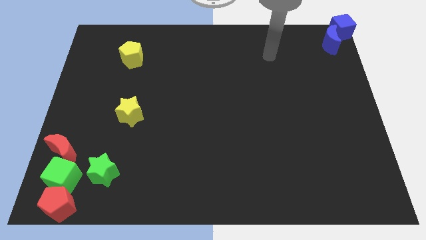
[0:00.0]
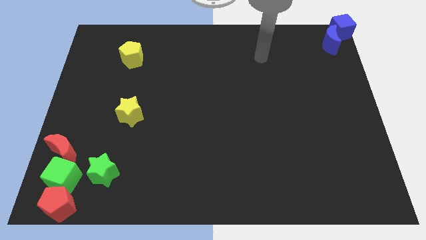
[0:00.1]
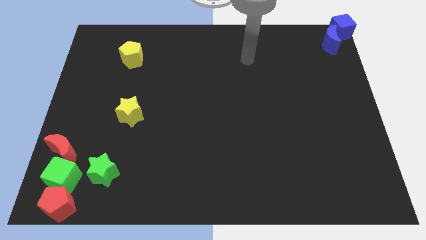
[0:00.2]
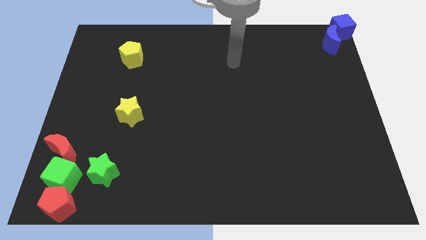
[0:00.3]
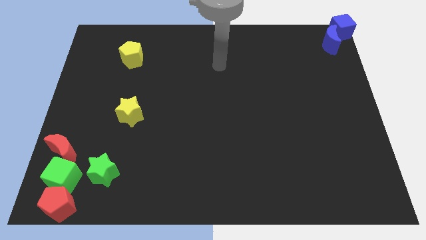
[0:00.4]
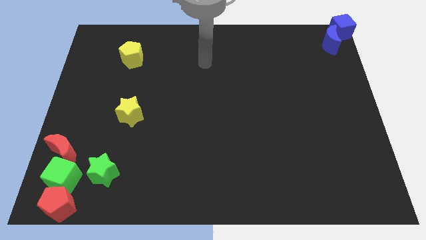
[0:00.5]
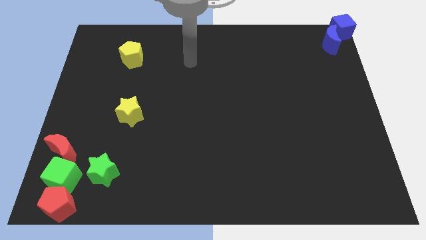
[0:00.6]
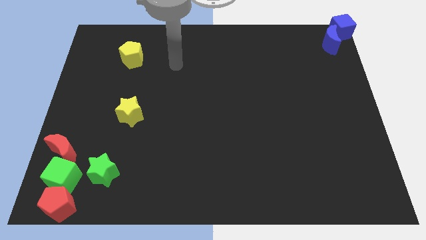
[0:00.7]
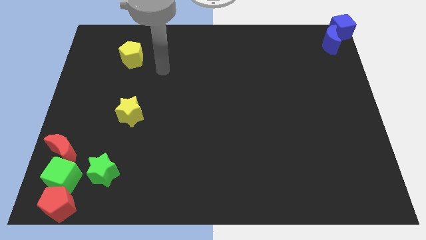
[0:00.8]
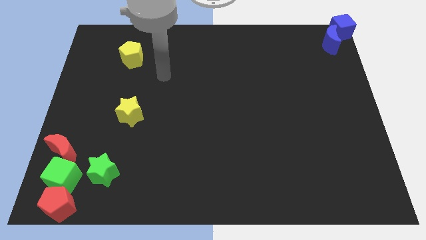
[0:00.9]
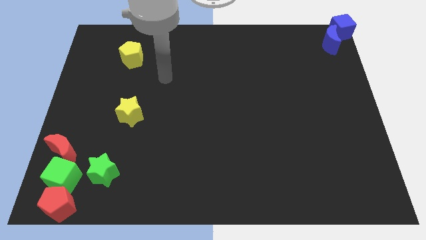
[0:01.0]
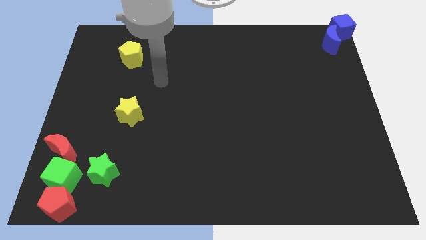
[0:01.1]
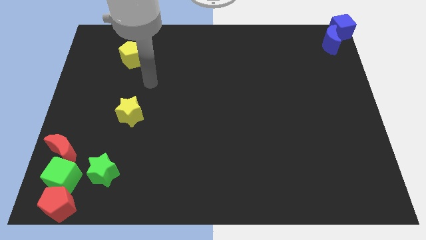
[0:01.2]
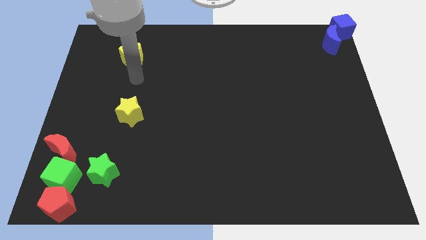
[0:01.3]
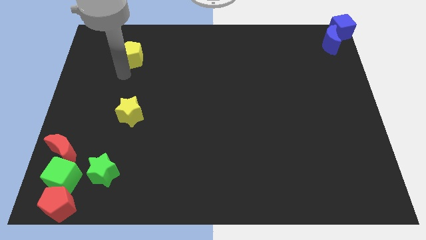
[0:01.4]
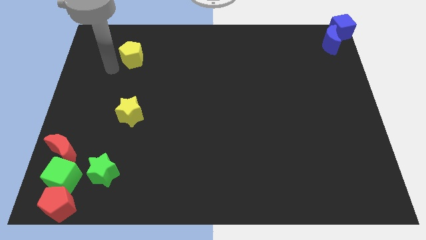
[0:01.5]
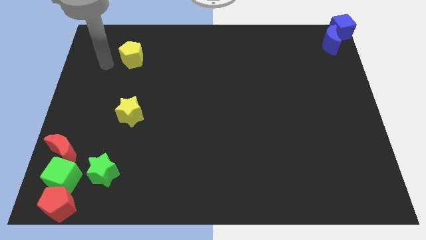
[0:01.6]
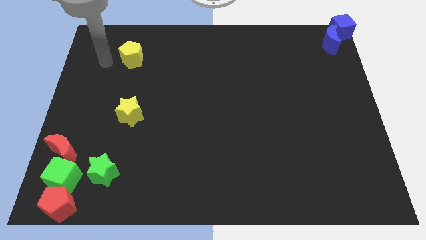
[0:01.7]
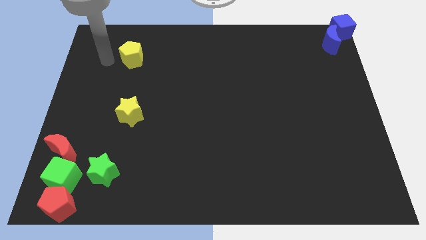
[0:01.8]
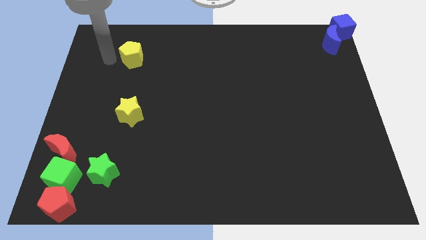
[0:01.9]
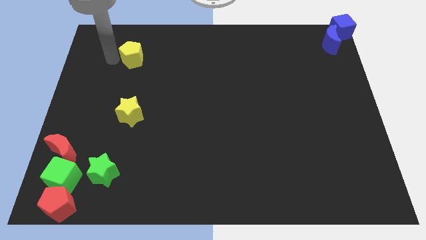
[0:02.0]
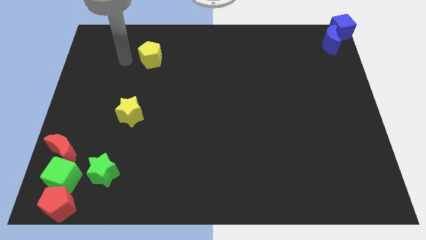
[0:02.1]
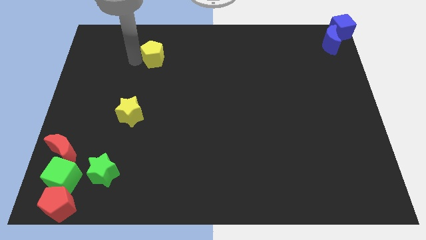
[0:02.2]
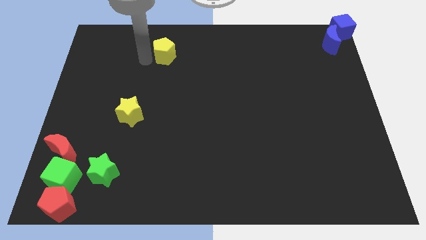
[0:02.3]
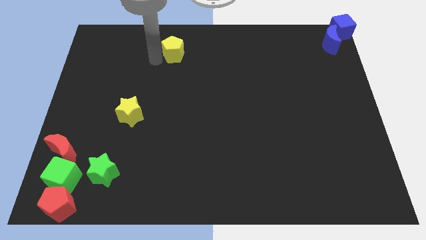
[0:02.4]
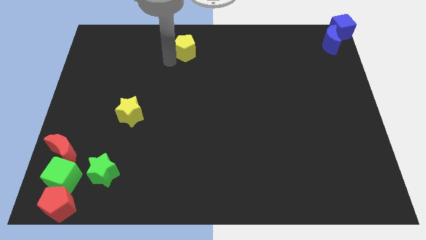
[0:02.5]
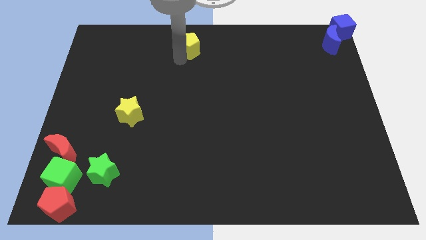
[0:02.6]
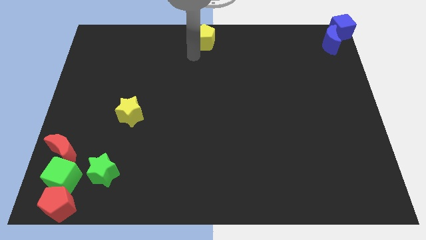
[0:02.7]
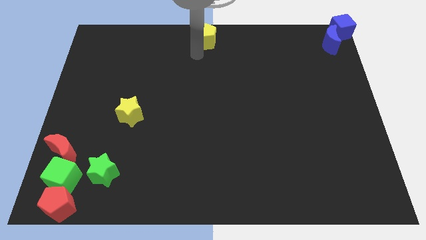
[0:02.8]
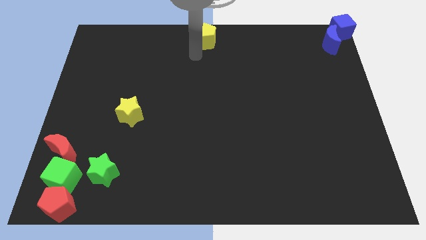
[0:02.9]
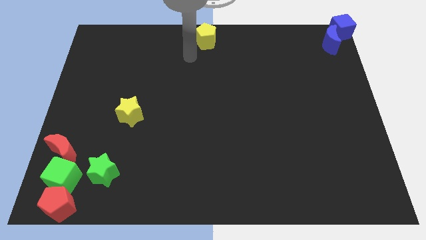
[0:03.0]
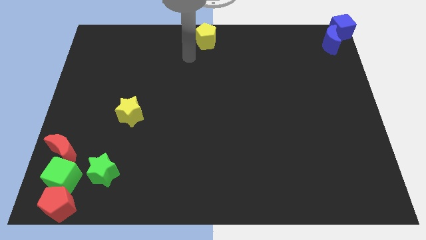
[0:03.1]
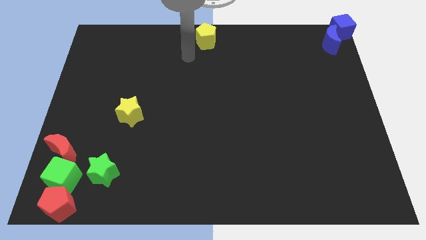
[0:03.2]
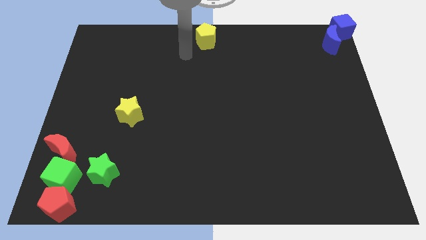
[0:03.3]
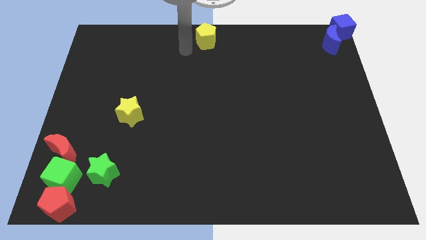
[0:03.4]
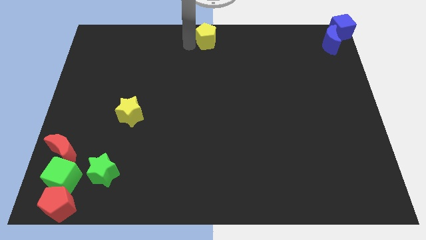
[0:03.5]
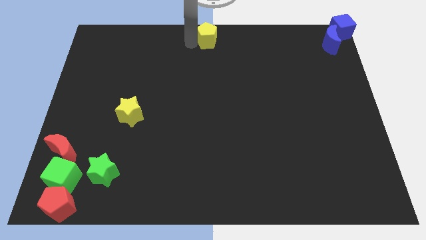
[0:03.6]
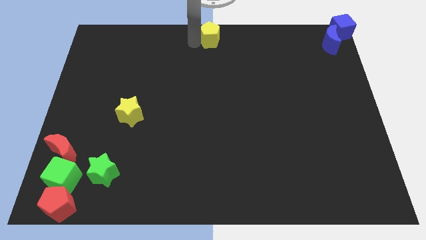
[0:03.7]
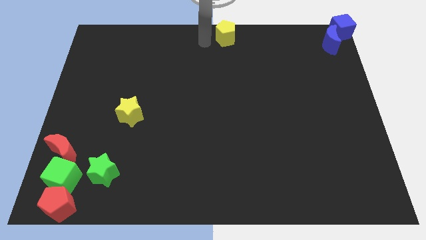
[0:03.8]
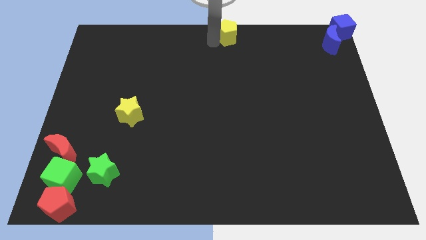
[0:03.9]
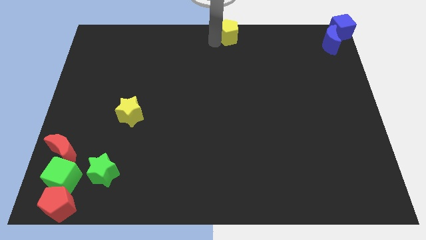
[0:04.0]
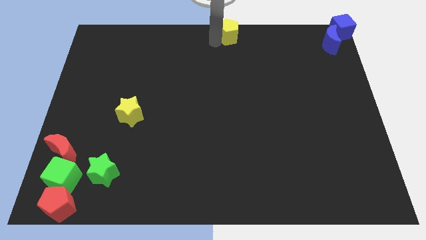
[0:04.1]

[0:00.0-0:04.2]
move yellow pentagon to the top center of the board

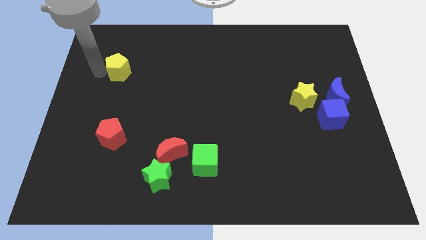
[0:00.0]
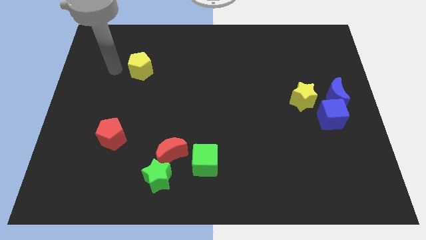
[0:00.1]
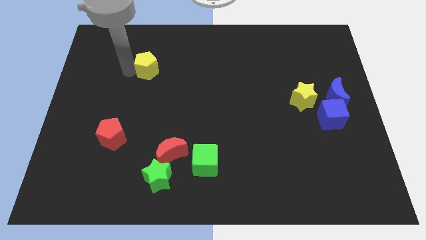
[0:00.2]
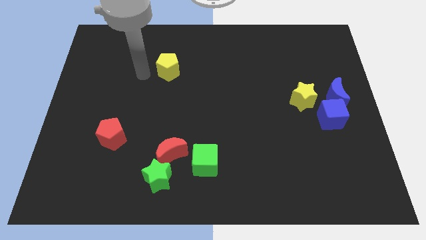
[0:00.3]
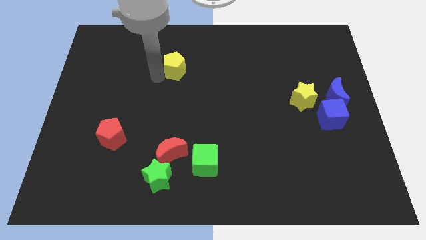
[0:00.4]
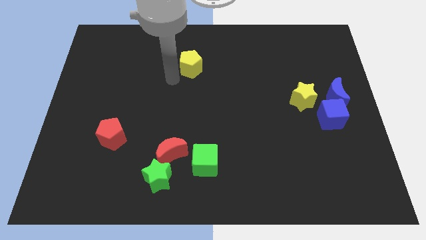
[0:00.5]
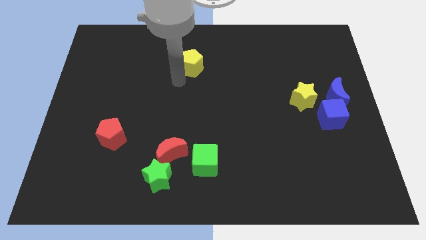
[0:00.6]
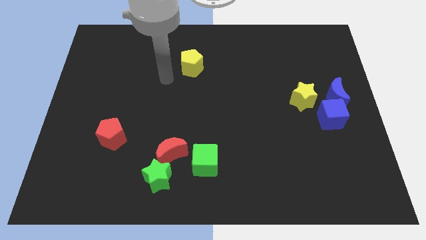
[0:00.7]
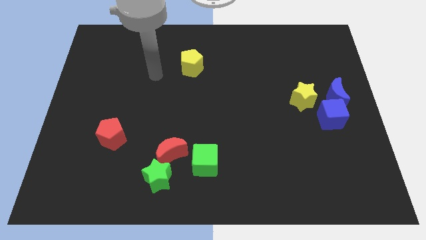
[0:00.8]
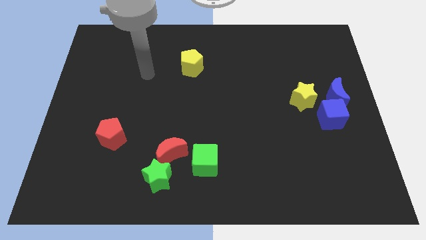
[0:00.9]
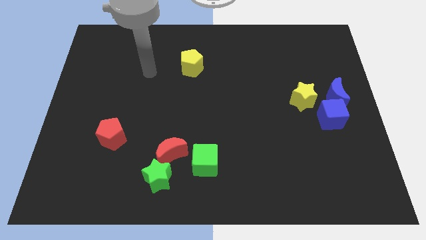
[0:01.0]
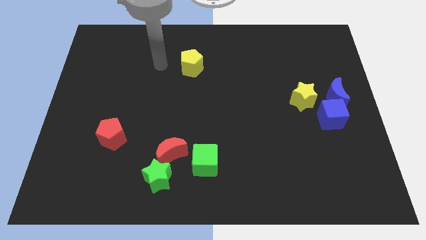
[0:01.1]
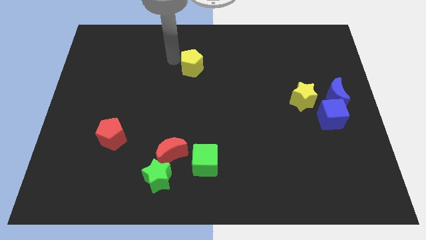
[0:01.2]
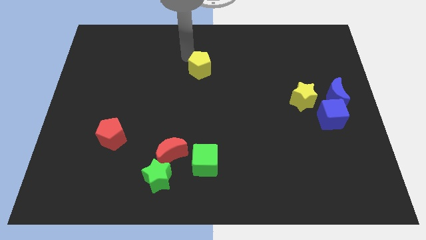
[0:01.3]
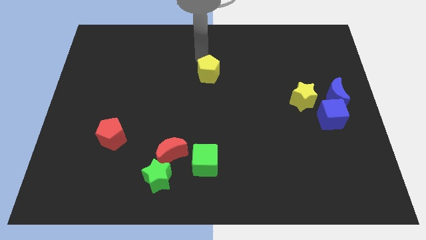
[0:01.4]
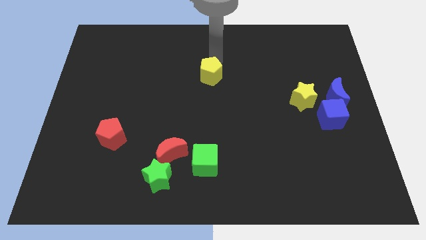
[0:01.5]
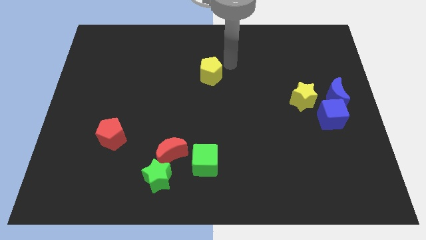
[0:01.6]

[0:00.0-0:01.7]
move the yellow pentagon to the center of the board

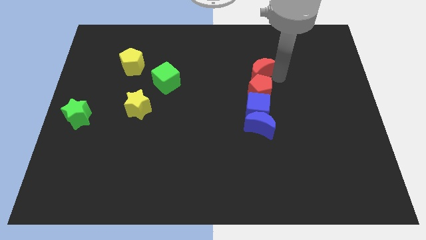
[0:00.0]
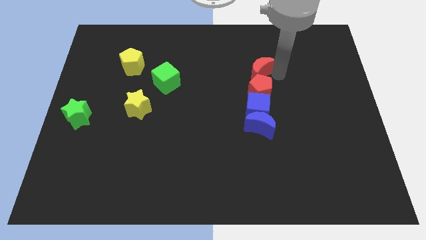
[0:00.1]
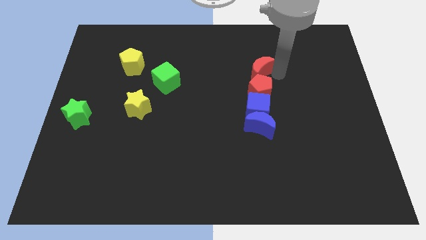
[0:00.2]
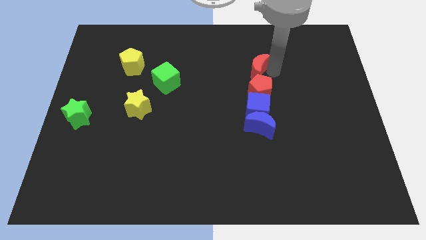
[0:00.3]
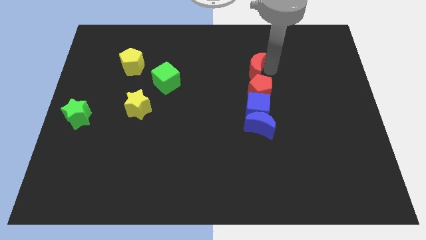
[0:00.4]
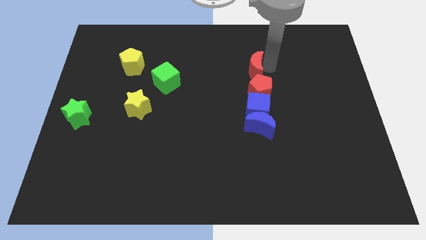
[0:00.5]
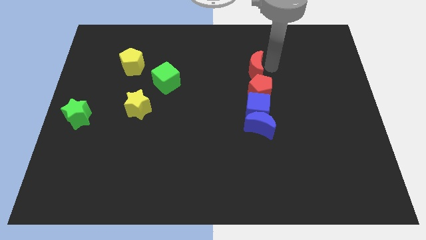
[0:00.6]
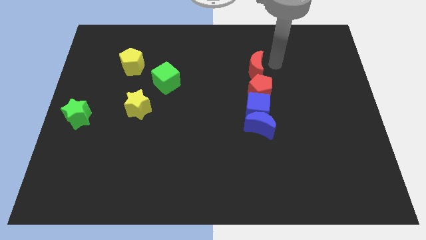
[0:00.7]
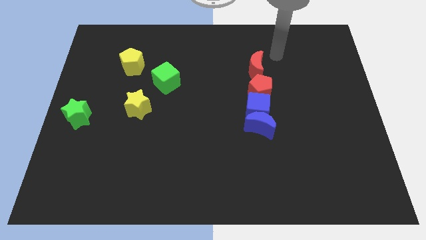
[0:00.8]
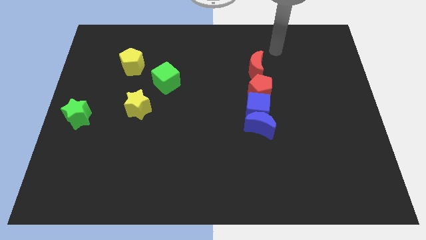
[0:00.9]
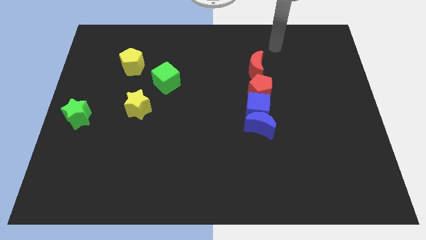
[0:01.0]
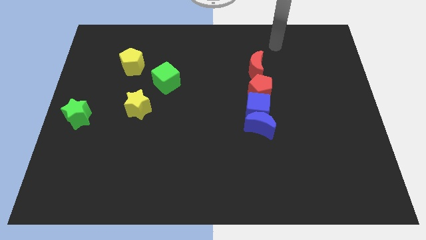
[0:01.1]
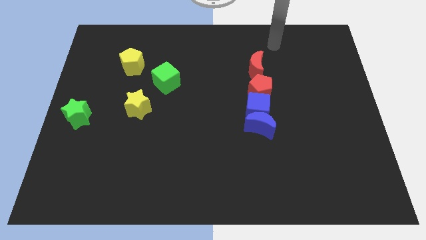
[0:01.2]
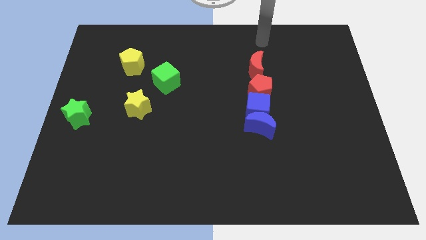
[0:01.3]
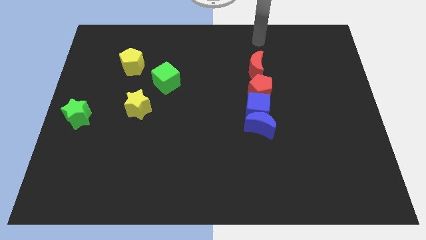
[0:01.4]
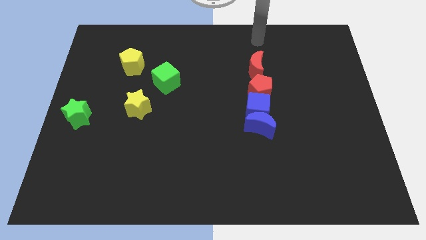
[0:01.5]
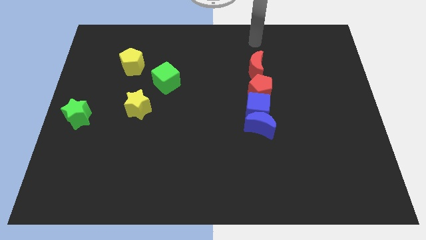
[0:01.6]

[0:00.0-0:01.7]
adjust the red moon at the top side of the red pentagon

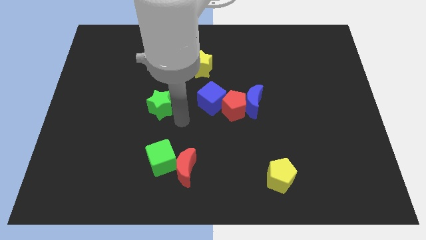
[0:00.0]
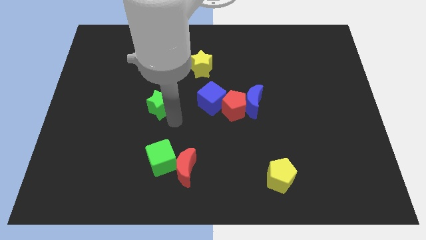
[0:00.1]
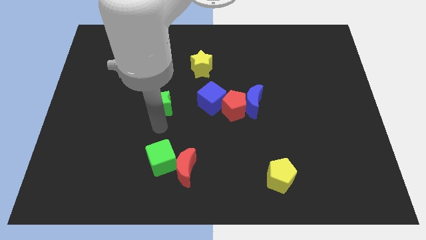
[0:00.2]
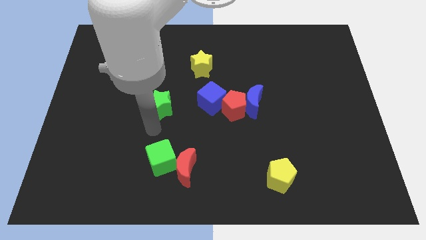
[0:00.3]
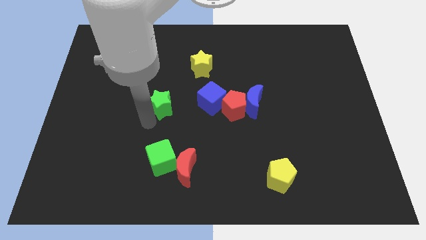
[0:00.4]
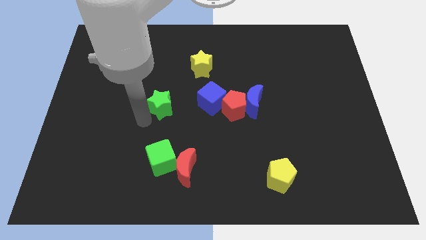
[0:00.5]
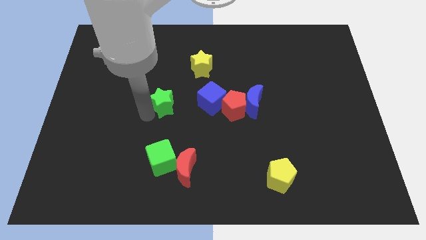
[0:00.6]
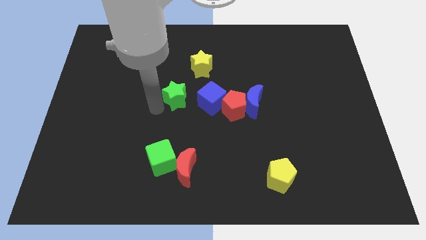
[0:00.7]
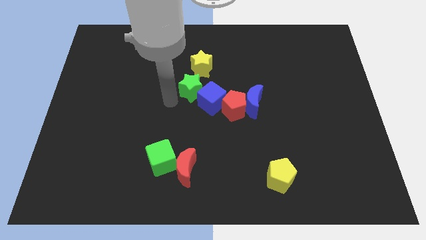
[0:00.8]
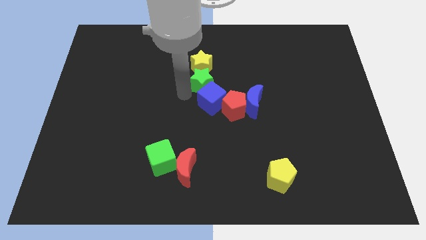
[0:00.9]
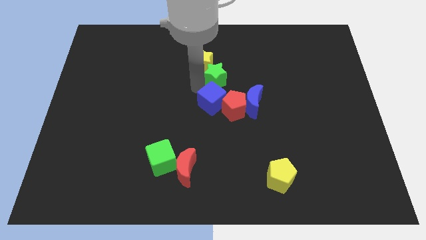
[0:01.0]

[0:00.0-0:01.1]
place green star on top of blue cube

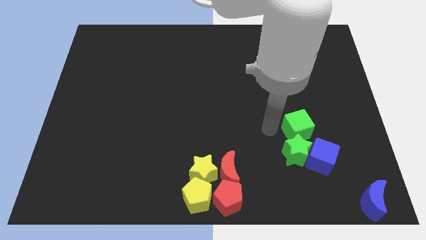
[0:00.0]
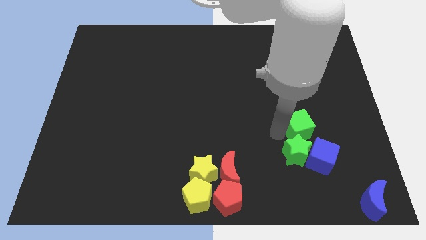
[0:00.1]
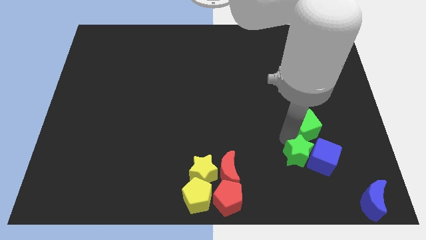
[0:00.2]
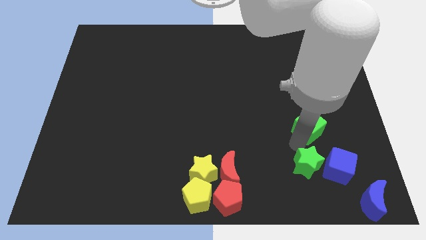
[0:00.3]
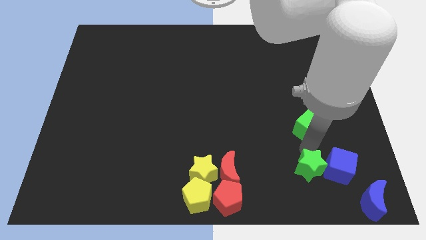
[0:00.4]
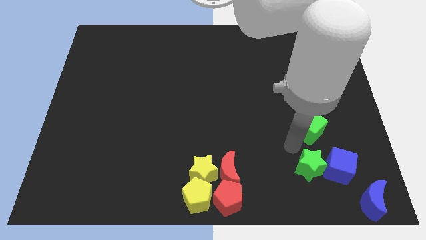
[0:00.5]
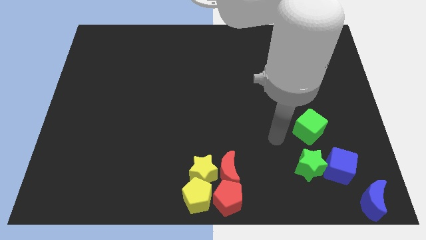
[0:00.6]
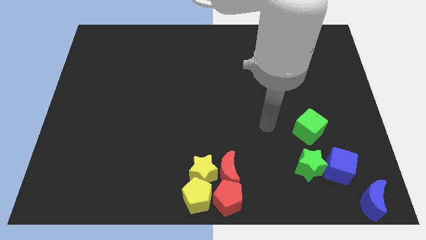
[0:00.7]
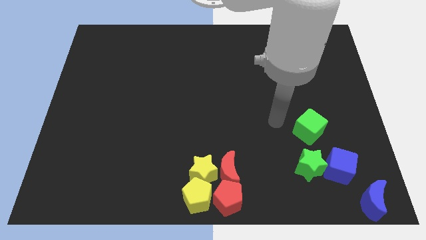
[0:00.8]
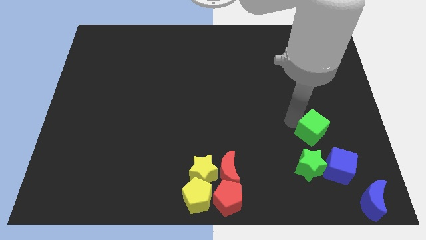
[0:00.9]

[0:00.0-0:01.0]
separate the green blocks
